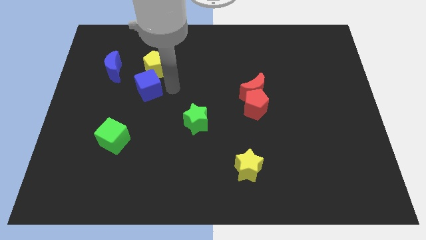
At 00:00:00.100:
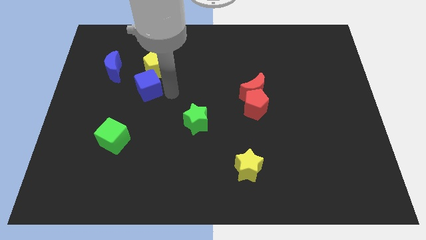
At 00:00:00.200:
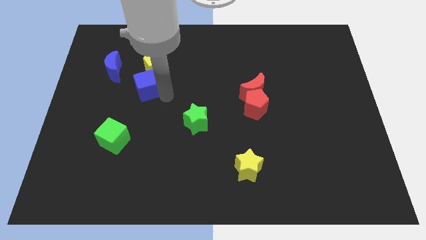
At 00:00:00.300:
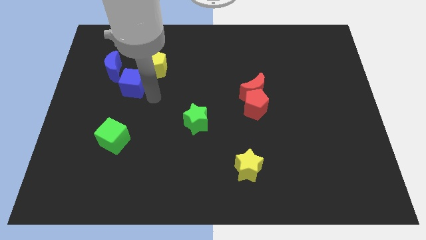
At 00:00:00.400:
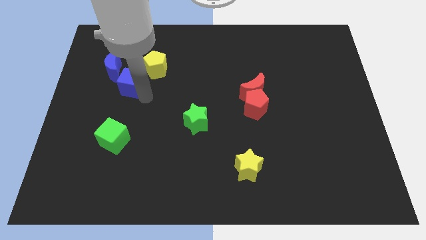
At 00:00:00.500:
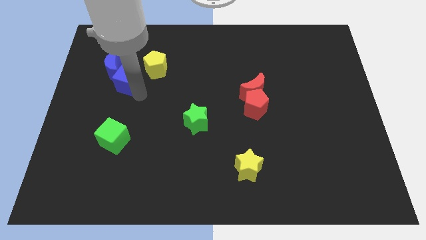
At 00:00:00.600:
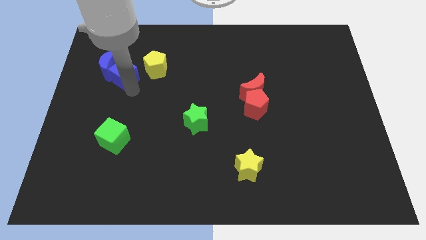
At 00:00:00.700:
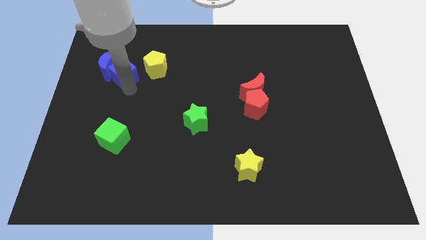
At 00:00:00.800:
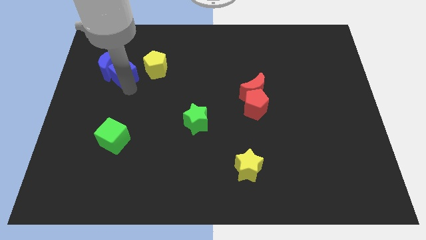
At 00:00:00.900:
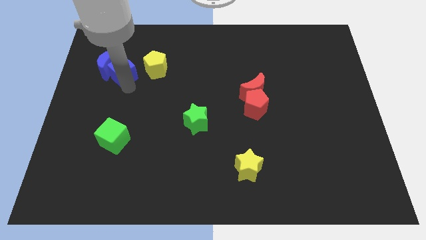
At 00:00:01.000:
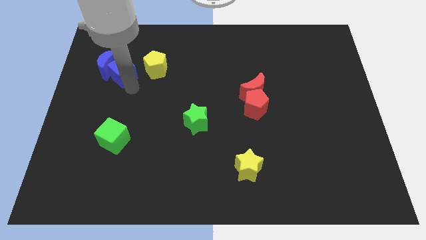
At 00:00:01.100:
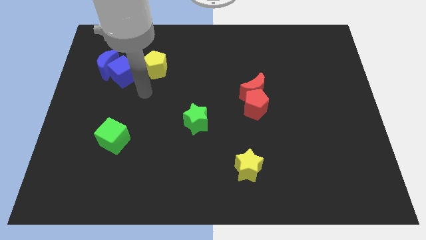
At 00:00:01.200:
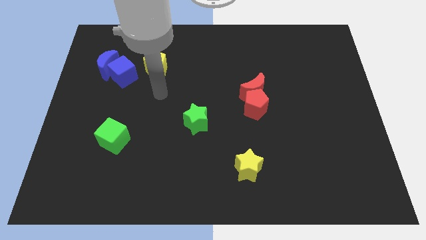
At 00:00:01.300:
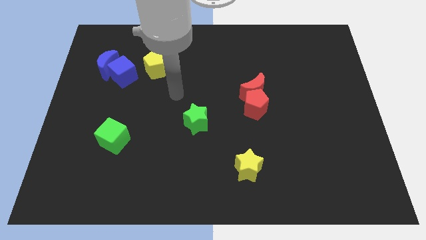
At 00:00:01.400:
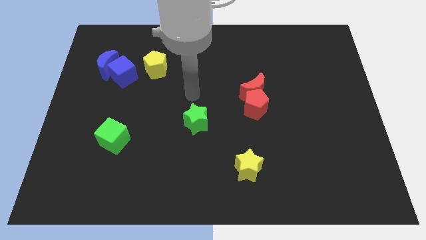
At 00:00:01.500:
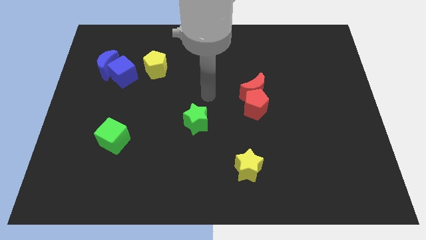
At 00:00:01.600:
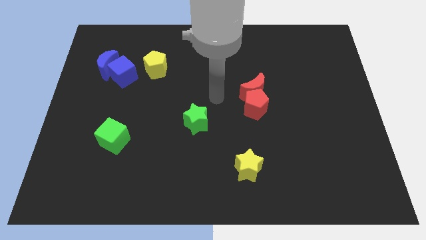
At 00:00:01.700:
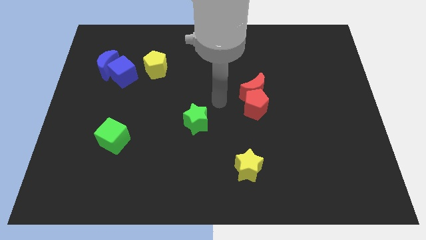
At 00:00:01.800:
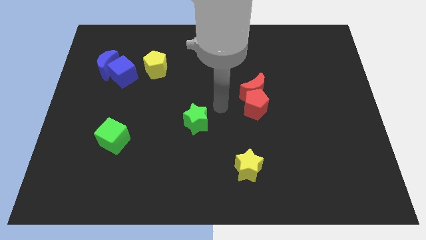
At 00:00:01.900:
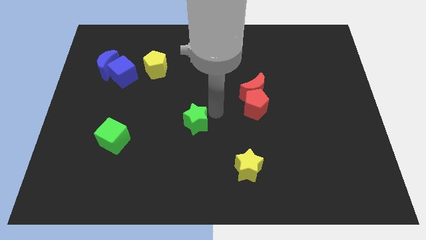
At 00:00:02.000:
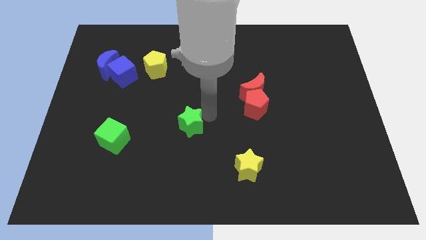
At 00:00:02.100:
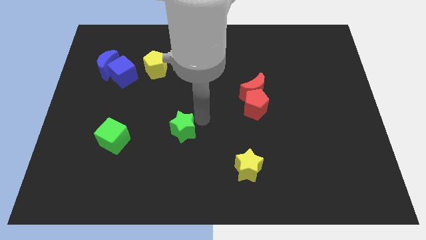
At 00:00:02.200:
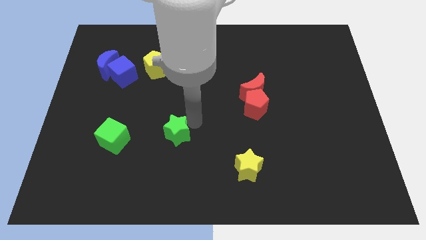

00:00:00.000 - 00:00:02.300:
place the green star diagonally to the yellow pentagon

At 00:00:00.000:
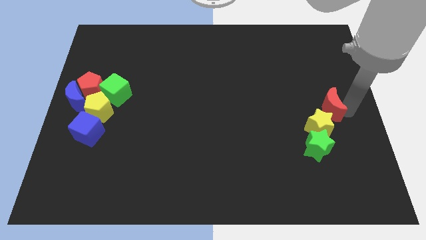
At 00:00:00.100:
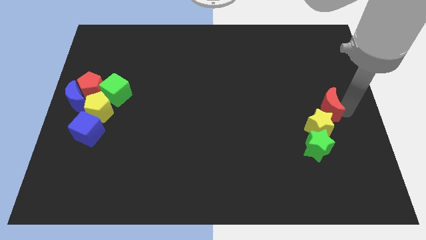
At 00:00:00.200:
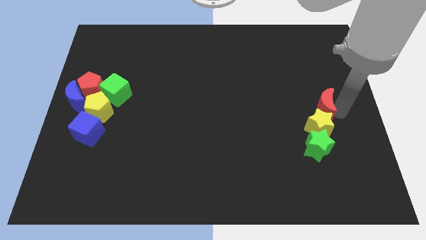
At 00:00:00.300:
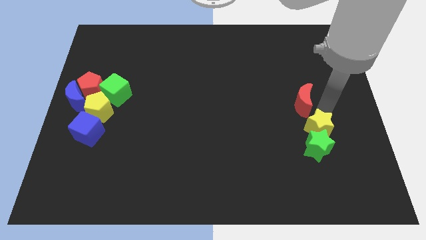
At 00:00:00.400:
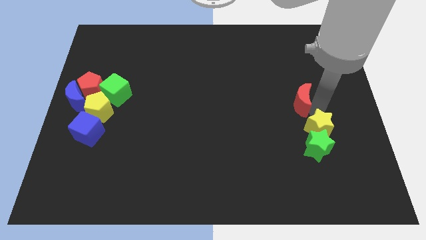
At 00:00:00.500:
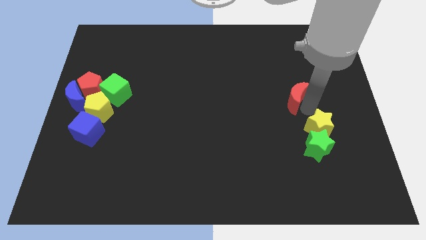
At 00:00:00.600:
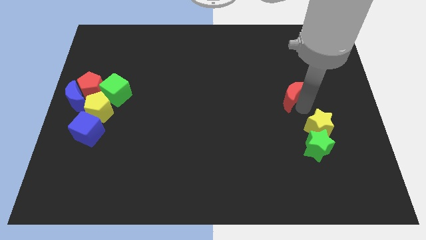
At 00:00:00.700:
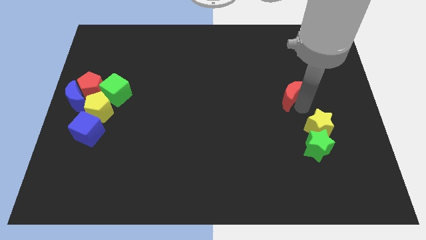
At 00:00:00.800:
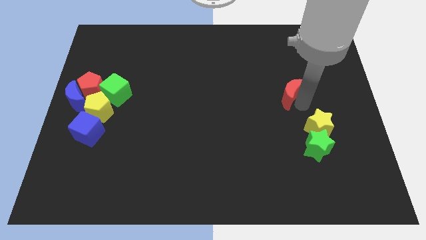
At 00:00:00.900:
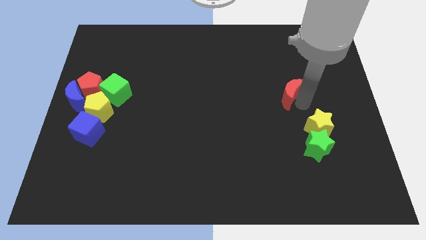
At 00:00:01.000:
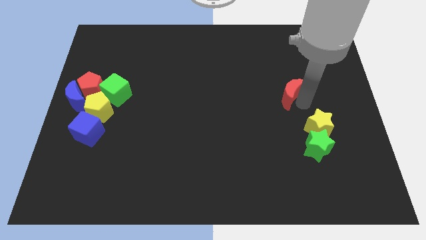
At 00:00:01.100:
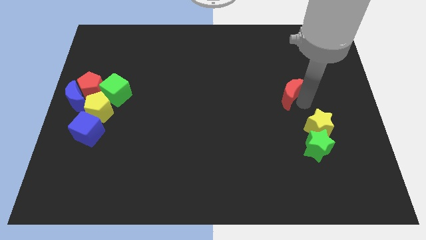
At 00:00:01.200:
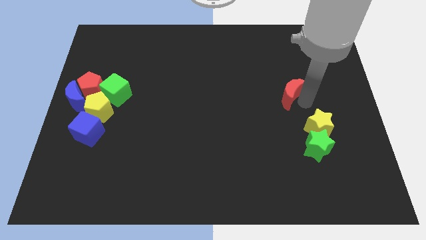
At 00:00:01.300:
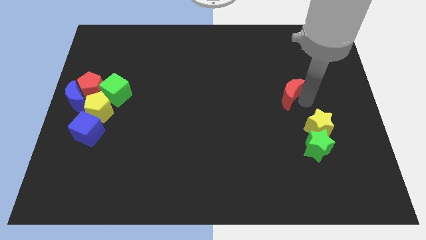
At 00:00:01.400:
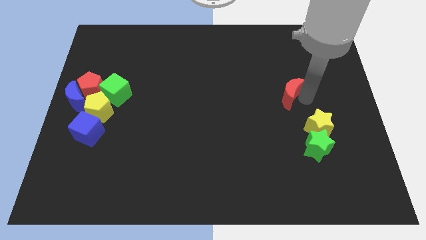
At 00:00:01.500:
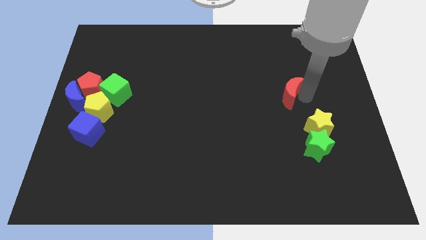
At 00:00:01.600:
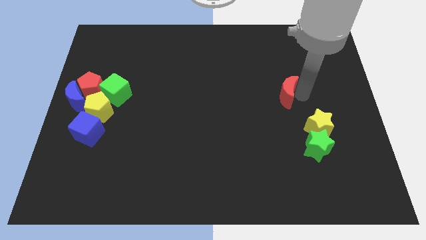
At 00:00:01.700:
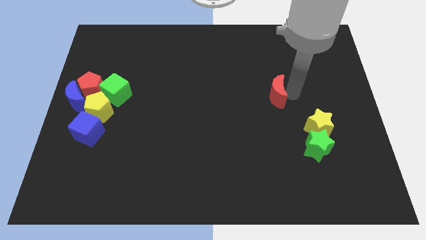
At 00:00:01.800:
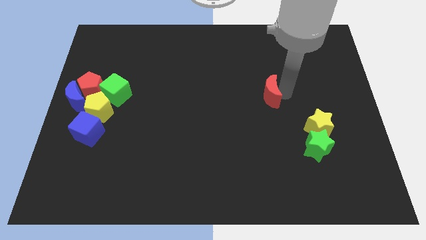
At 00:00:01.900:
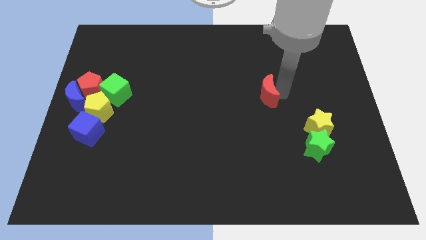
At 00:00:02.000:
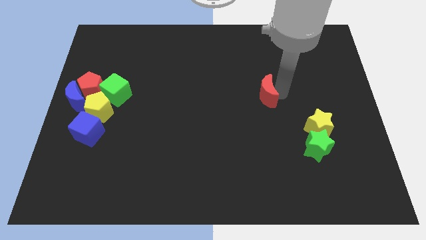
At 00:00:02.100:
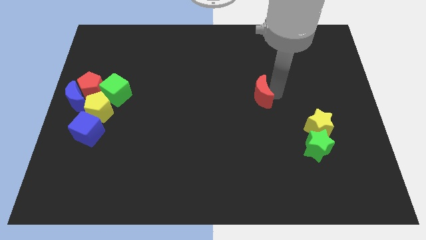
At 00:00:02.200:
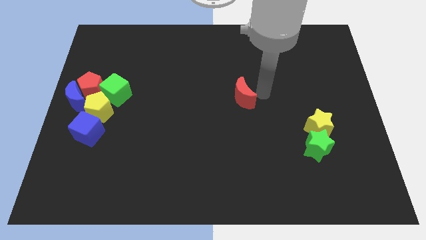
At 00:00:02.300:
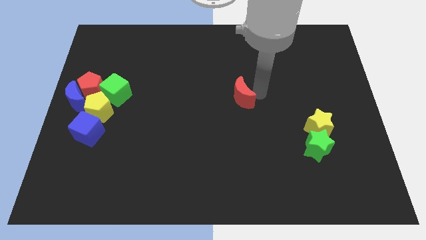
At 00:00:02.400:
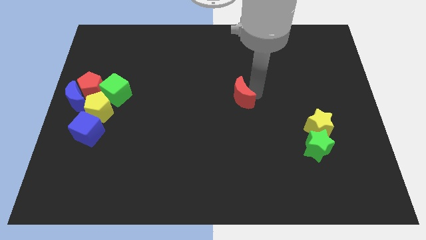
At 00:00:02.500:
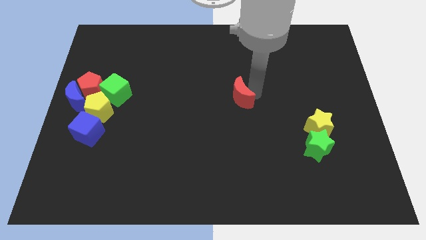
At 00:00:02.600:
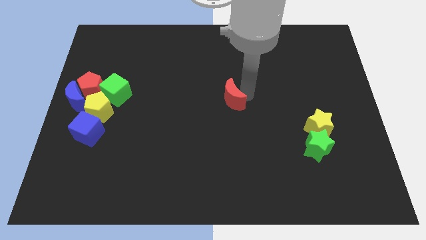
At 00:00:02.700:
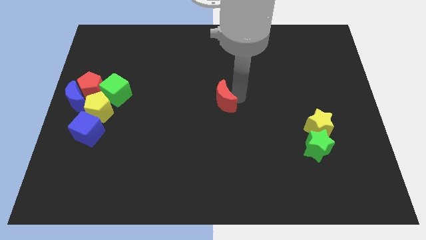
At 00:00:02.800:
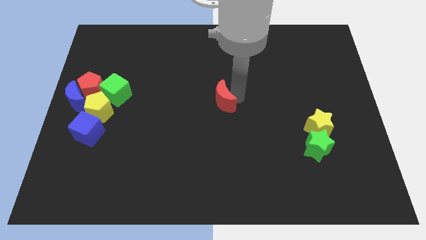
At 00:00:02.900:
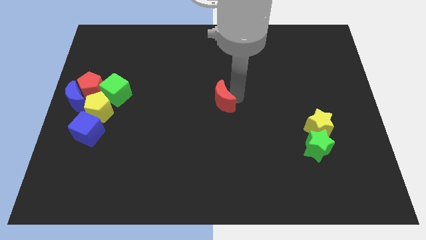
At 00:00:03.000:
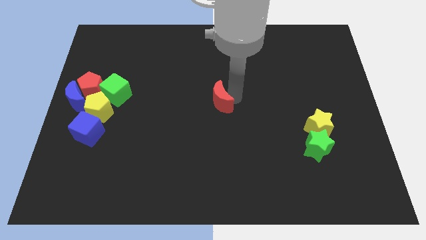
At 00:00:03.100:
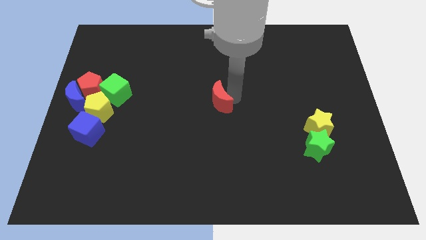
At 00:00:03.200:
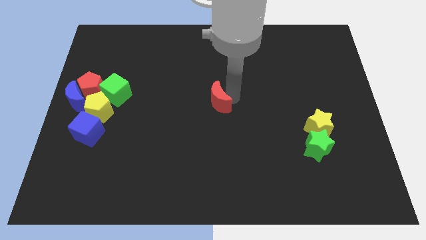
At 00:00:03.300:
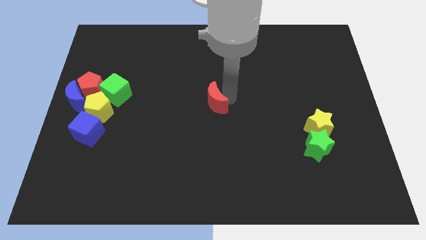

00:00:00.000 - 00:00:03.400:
push the red moon towards the middle of the board

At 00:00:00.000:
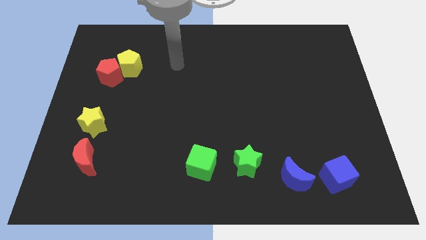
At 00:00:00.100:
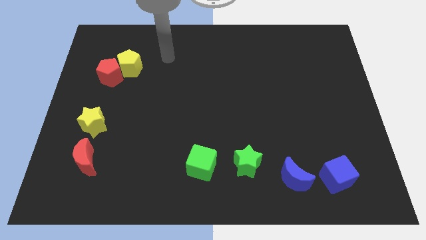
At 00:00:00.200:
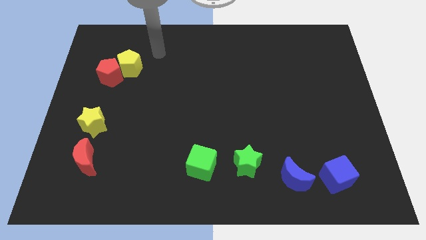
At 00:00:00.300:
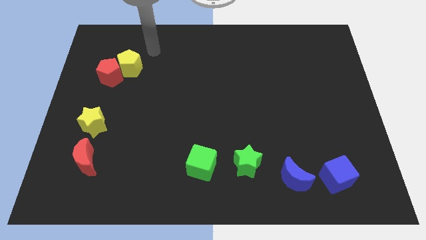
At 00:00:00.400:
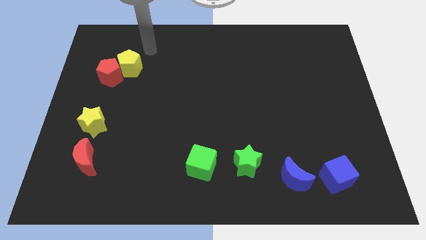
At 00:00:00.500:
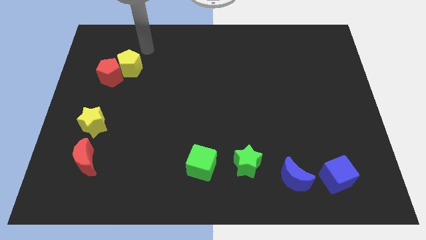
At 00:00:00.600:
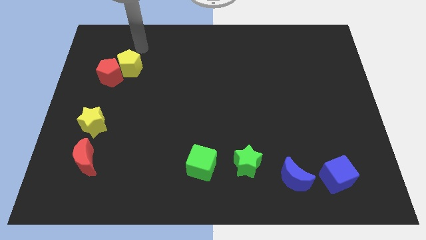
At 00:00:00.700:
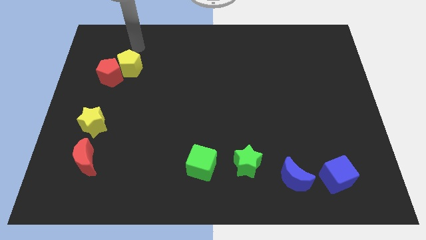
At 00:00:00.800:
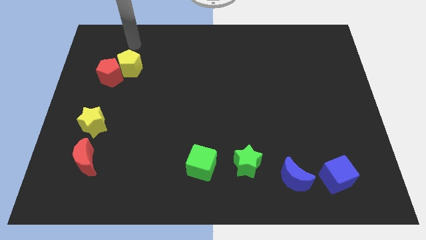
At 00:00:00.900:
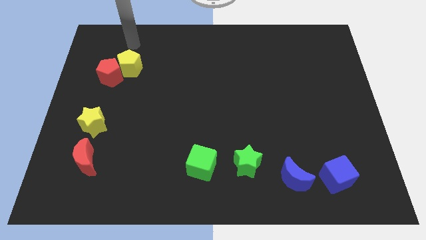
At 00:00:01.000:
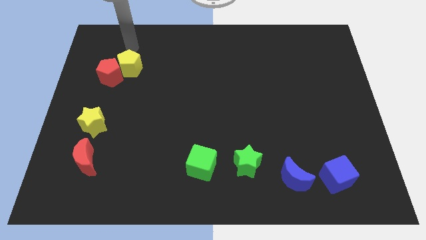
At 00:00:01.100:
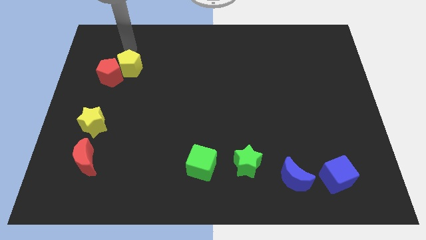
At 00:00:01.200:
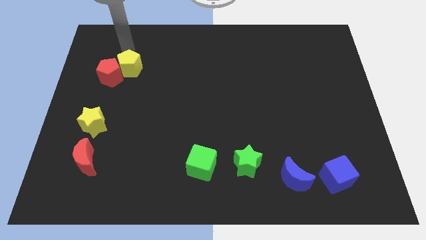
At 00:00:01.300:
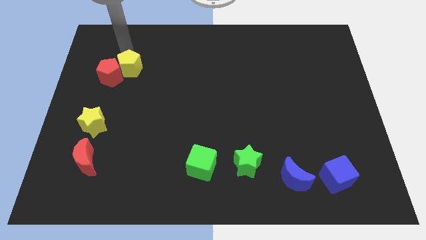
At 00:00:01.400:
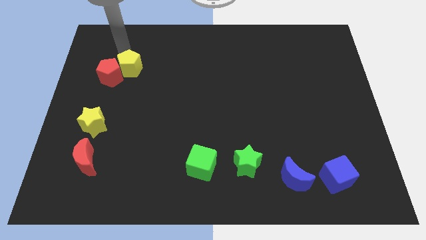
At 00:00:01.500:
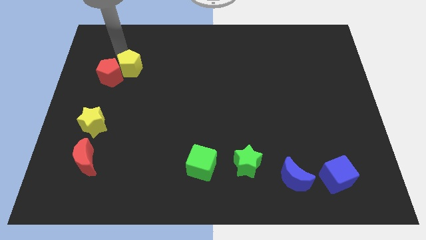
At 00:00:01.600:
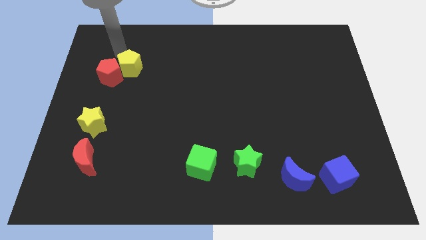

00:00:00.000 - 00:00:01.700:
push arm to the top of the yellow pentagon

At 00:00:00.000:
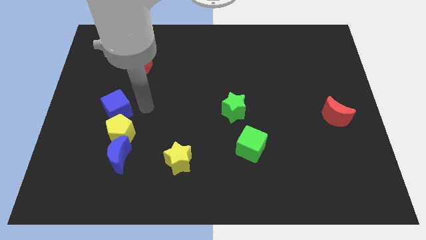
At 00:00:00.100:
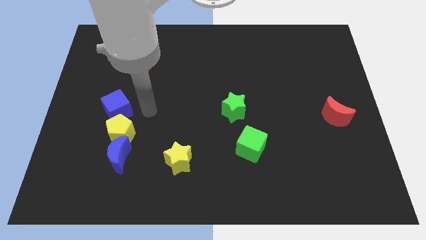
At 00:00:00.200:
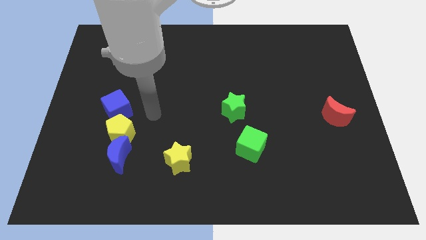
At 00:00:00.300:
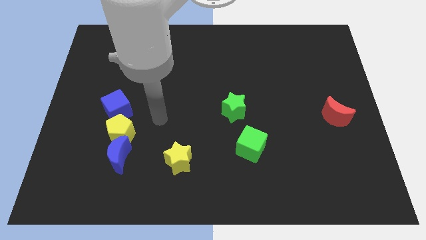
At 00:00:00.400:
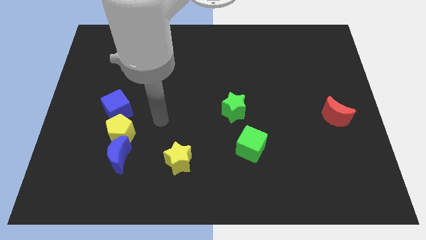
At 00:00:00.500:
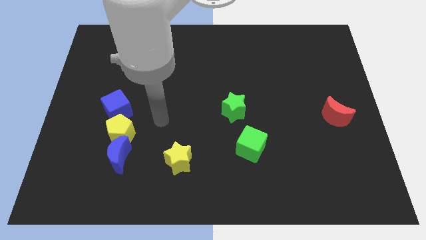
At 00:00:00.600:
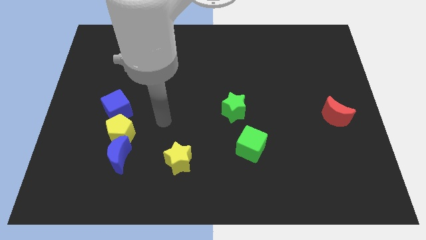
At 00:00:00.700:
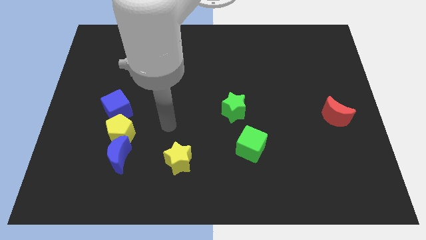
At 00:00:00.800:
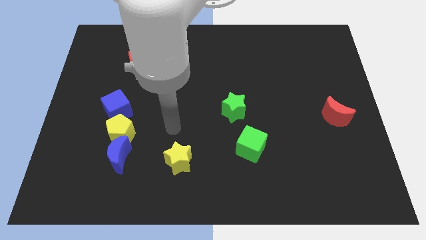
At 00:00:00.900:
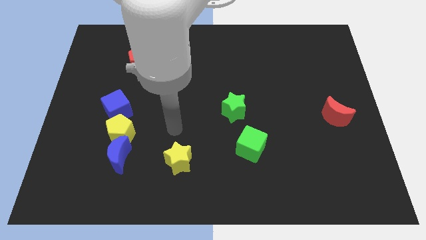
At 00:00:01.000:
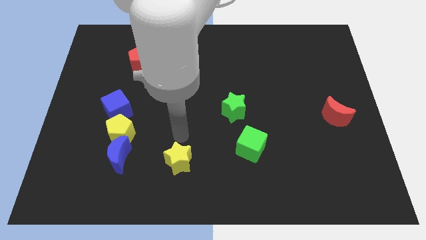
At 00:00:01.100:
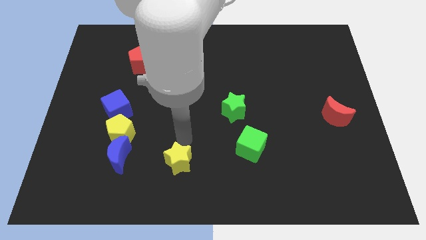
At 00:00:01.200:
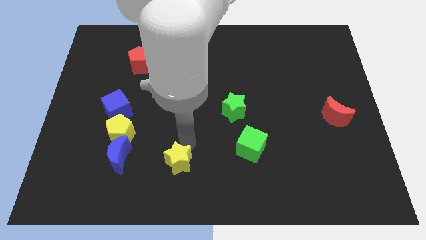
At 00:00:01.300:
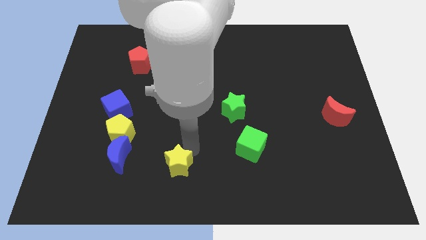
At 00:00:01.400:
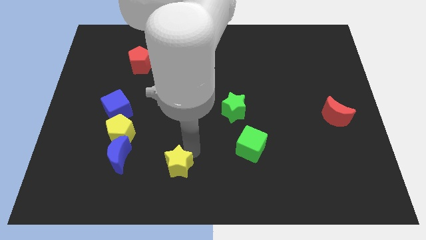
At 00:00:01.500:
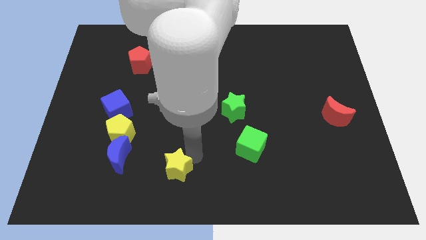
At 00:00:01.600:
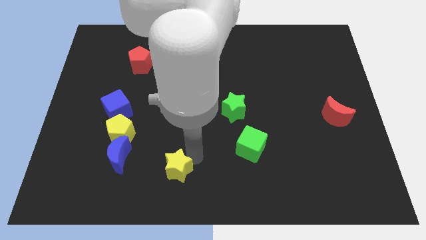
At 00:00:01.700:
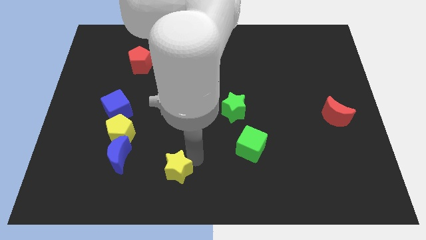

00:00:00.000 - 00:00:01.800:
push the yellow star slightly to the bottom
